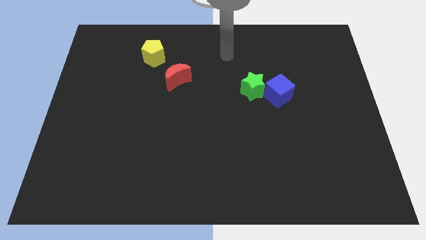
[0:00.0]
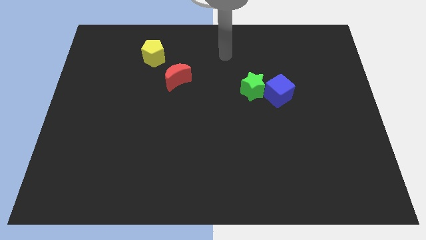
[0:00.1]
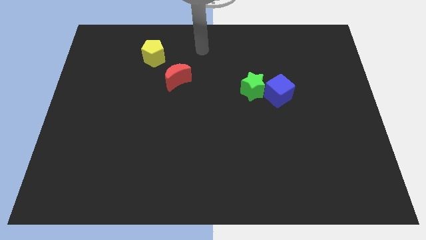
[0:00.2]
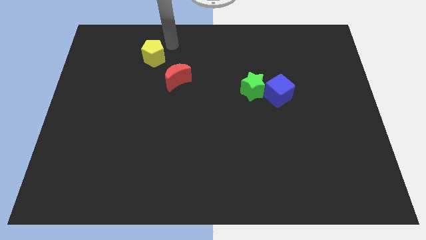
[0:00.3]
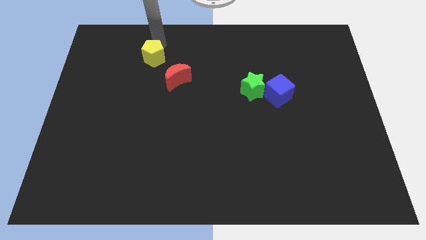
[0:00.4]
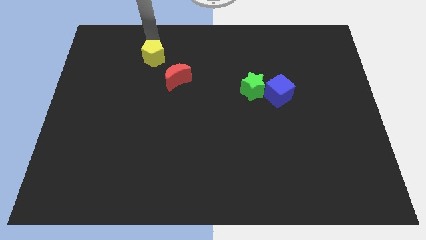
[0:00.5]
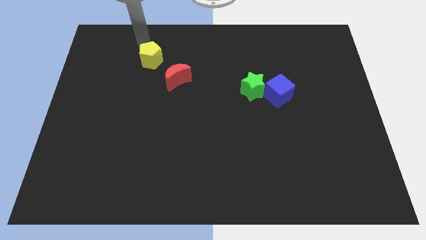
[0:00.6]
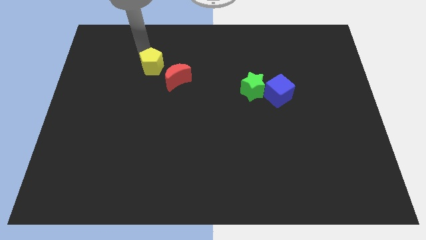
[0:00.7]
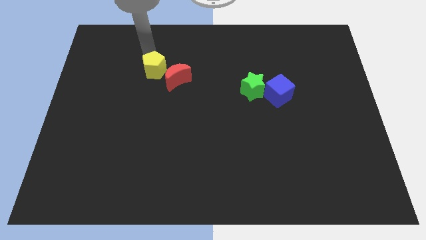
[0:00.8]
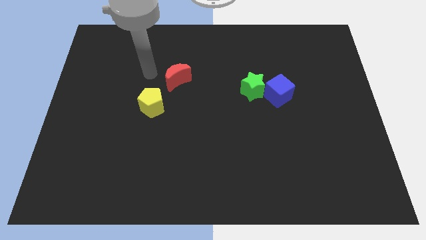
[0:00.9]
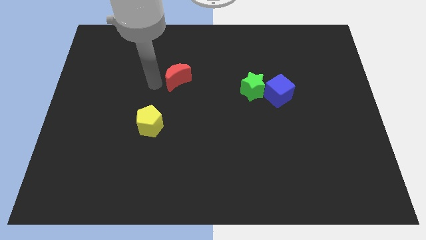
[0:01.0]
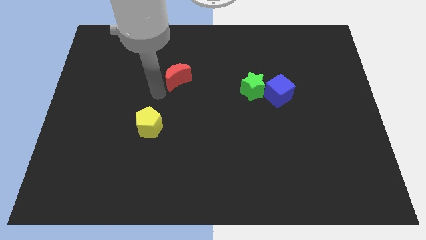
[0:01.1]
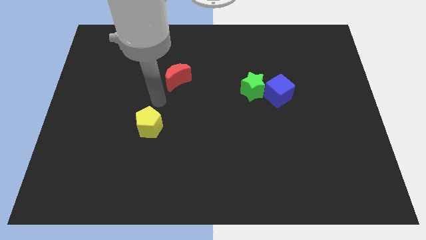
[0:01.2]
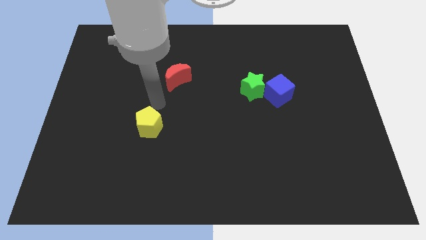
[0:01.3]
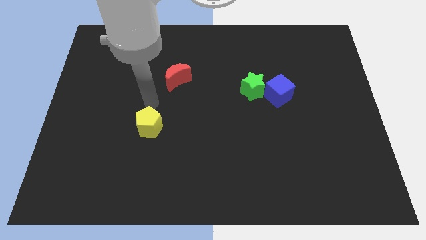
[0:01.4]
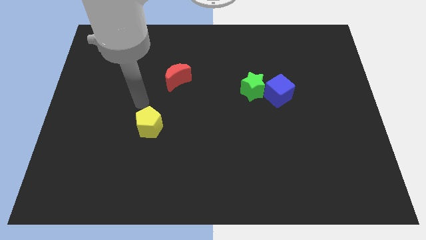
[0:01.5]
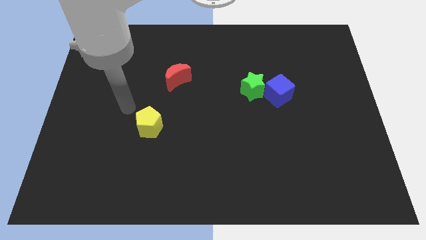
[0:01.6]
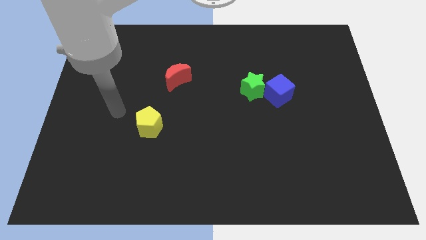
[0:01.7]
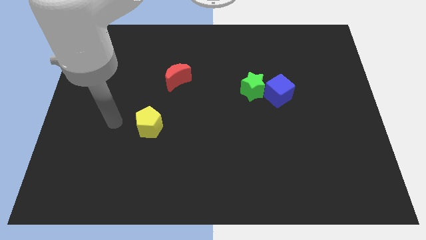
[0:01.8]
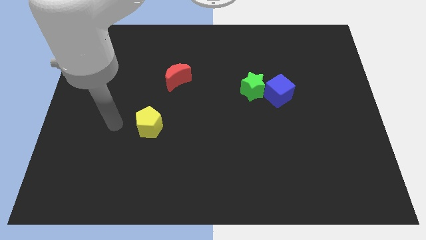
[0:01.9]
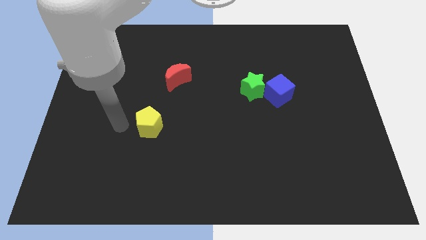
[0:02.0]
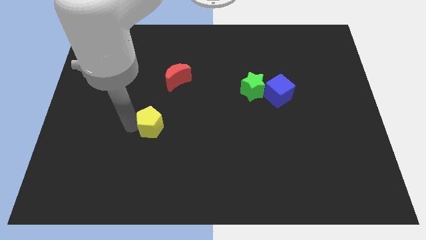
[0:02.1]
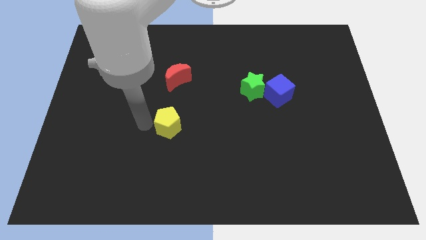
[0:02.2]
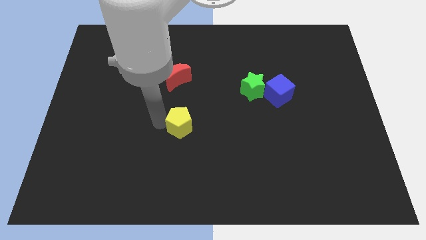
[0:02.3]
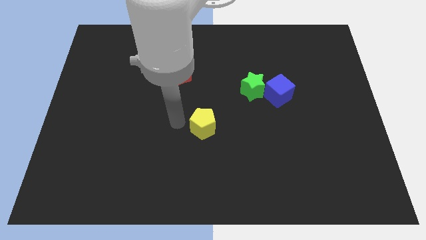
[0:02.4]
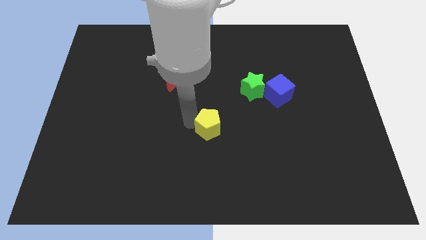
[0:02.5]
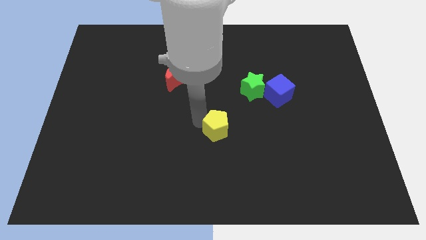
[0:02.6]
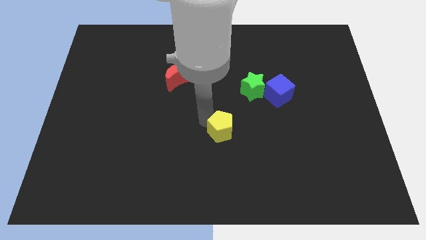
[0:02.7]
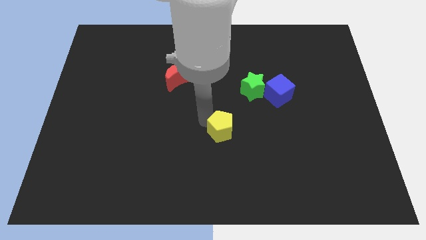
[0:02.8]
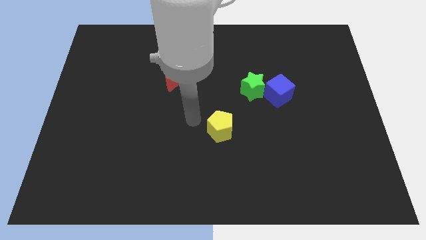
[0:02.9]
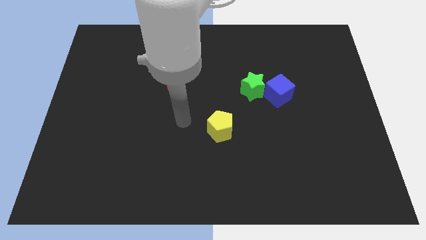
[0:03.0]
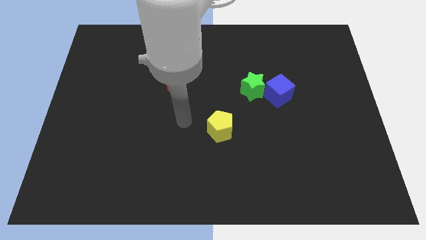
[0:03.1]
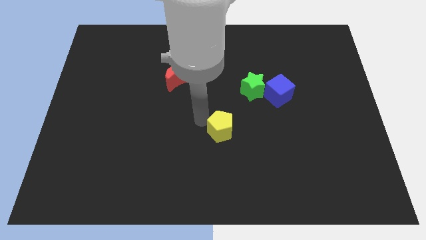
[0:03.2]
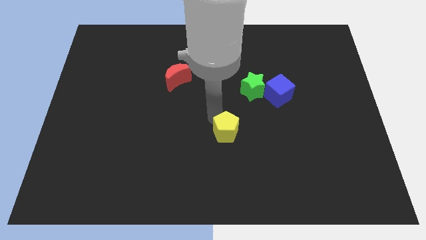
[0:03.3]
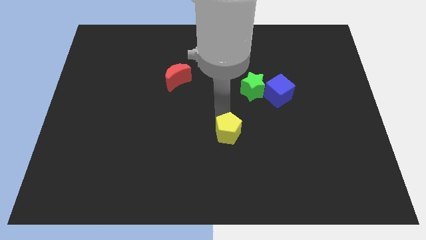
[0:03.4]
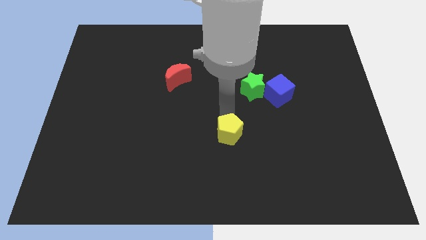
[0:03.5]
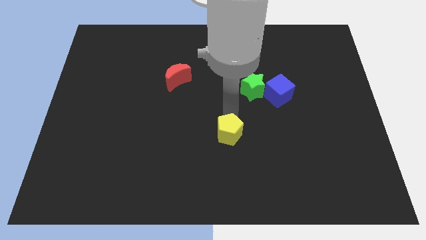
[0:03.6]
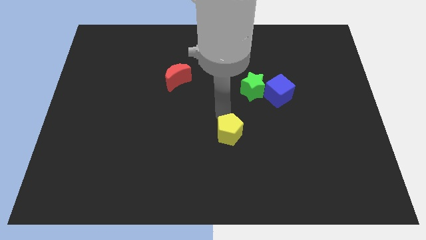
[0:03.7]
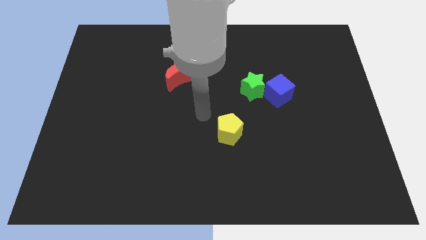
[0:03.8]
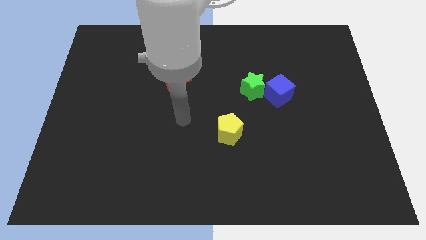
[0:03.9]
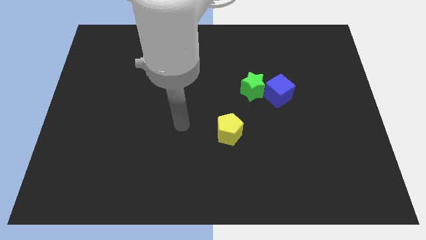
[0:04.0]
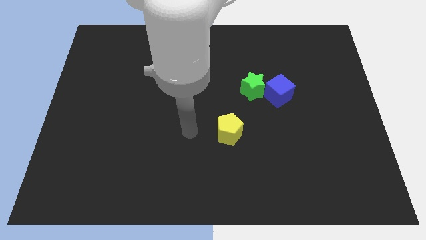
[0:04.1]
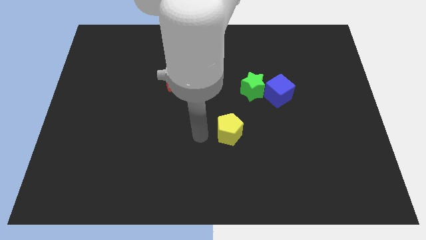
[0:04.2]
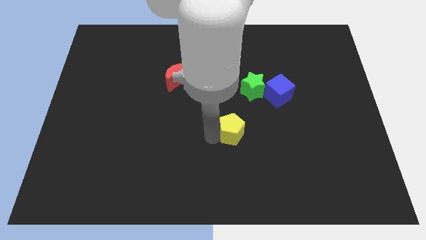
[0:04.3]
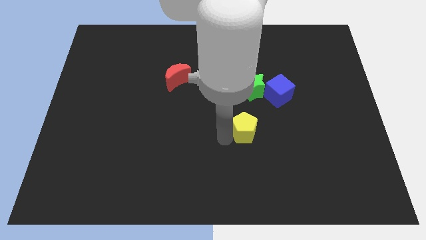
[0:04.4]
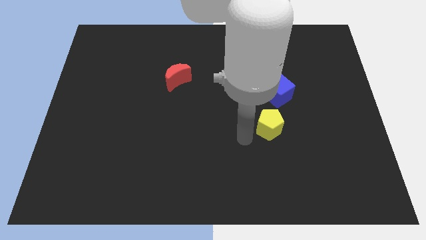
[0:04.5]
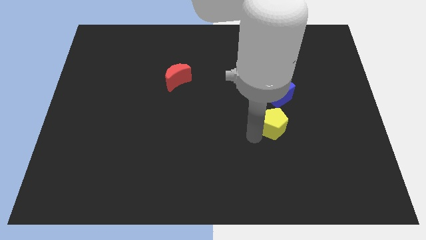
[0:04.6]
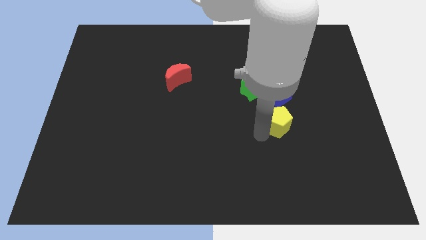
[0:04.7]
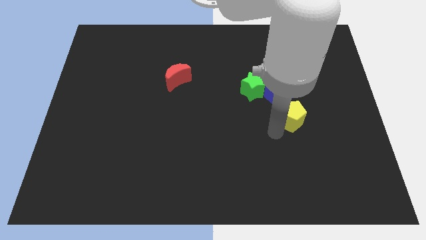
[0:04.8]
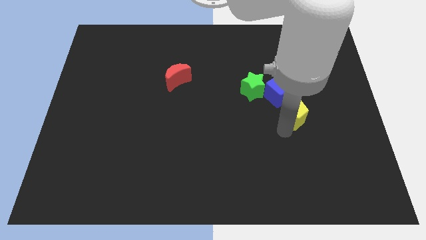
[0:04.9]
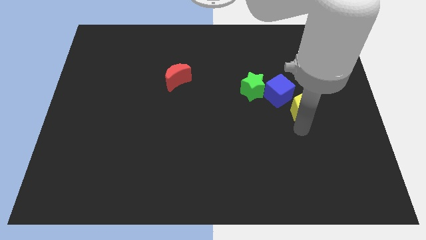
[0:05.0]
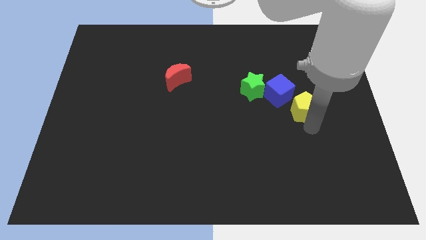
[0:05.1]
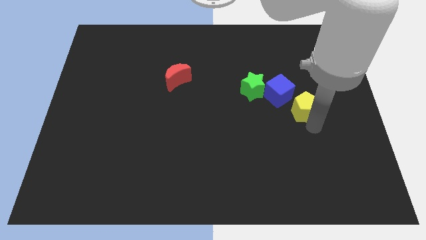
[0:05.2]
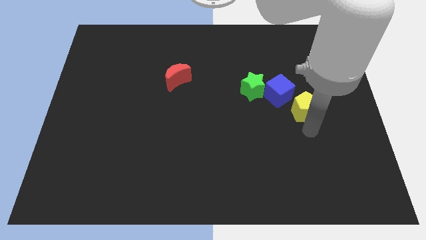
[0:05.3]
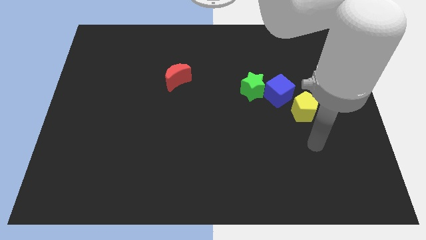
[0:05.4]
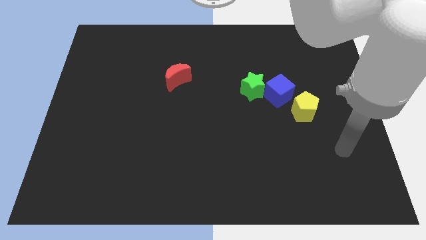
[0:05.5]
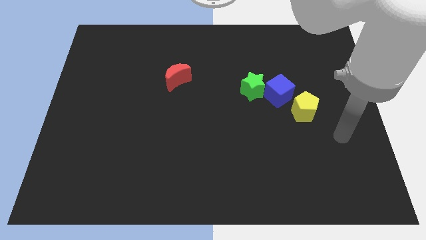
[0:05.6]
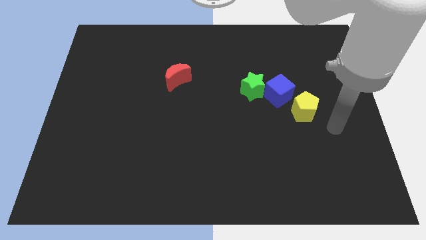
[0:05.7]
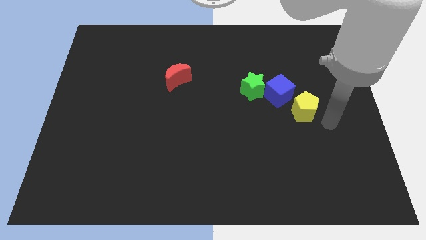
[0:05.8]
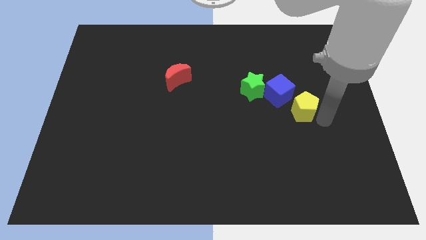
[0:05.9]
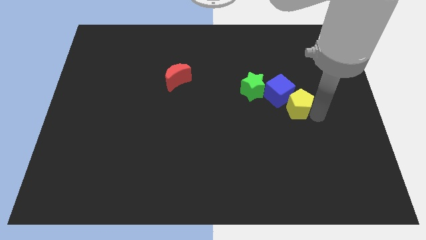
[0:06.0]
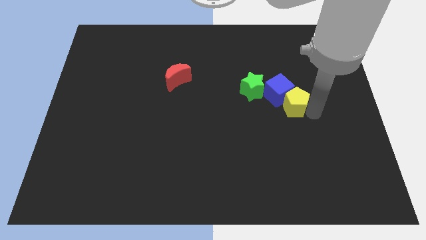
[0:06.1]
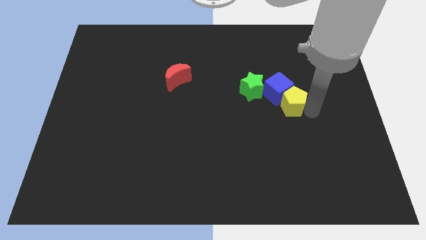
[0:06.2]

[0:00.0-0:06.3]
put the pentagon towards the cube

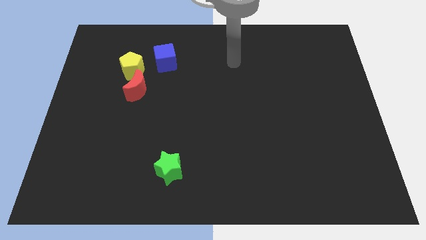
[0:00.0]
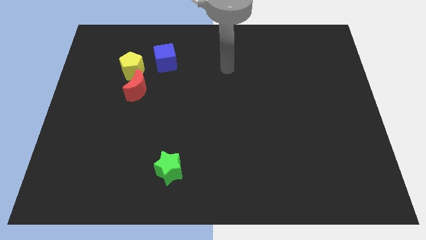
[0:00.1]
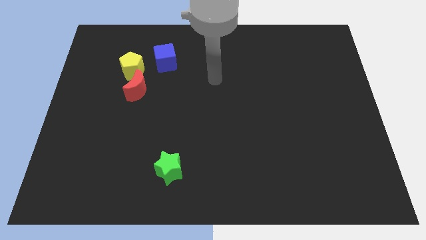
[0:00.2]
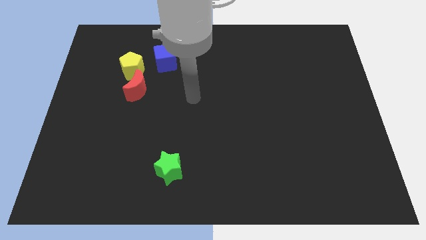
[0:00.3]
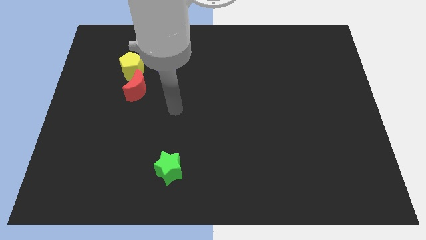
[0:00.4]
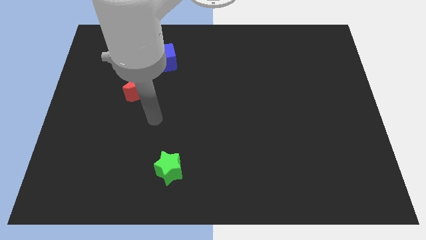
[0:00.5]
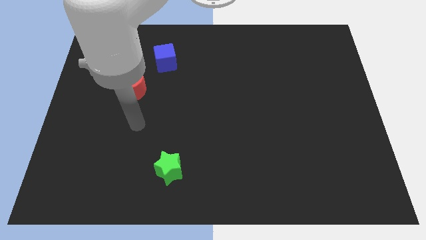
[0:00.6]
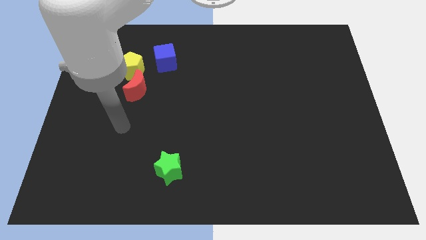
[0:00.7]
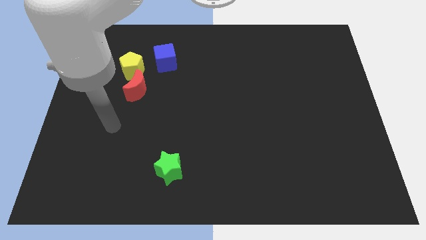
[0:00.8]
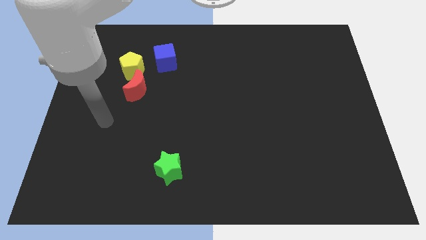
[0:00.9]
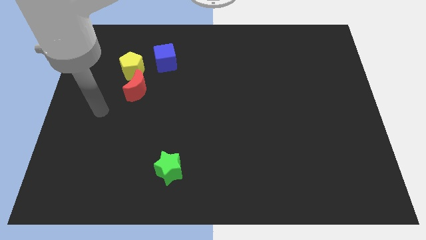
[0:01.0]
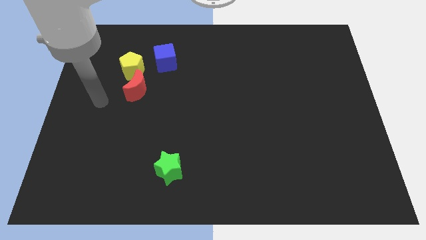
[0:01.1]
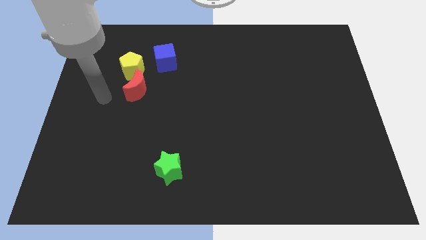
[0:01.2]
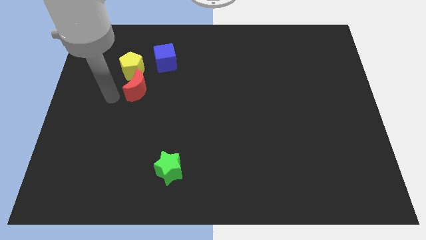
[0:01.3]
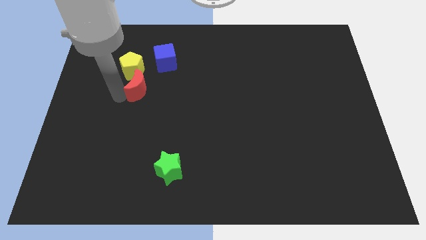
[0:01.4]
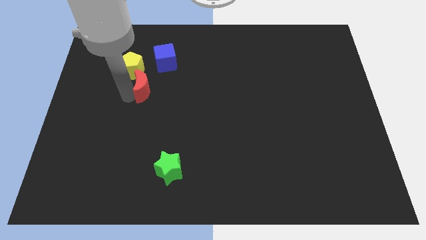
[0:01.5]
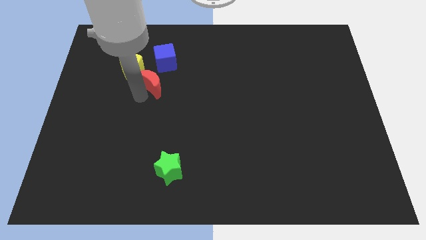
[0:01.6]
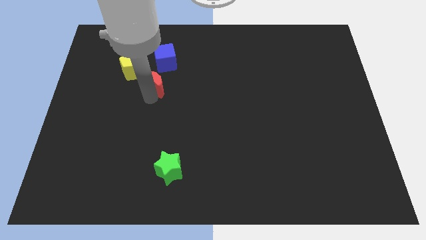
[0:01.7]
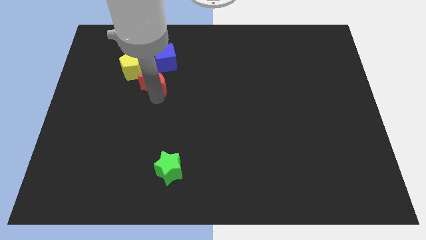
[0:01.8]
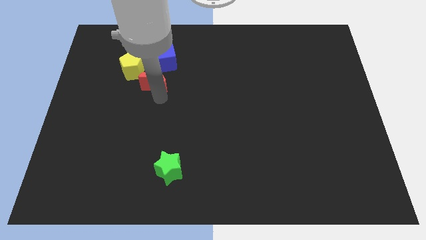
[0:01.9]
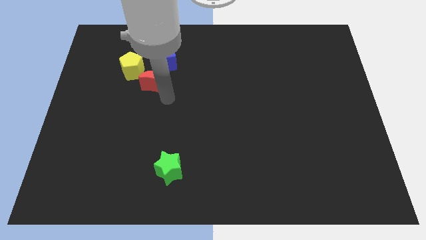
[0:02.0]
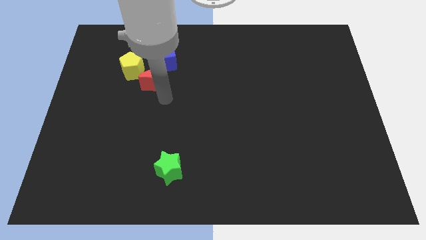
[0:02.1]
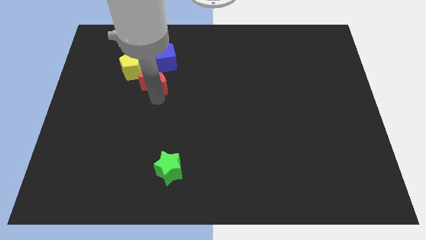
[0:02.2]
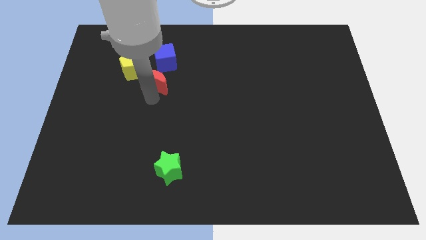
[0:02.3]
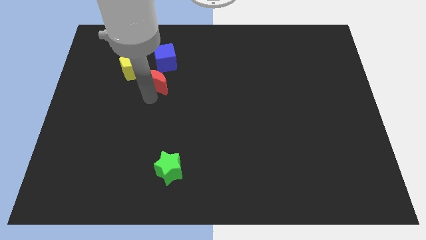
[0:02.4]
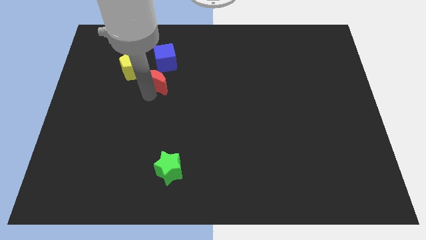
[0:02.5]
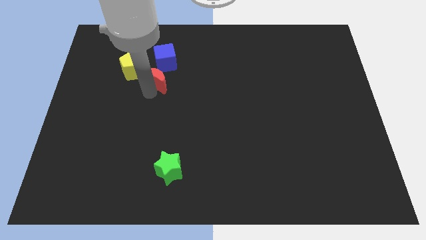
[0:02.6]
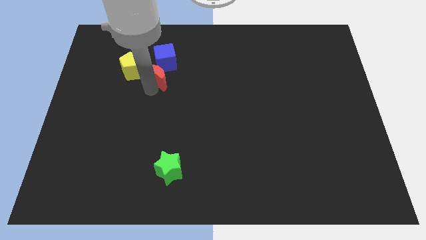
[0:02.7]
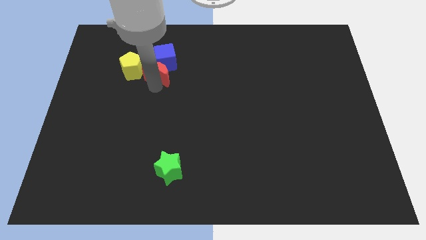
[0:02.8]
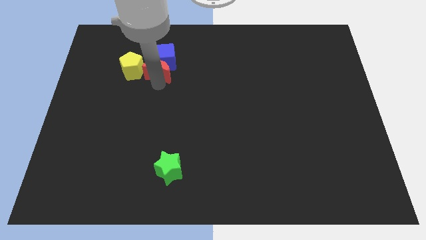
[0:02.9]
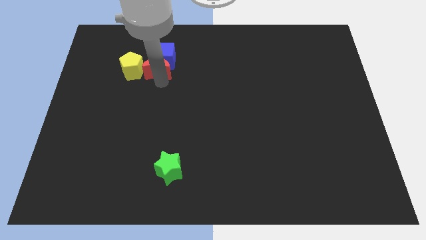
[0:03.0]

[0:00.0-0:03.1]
move the red moon to the blue block
